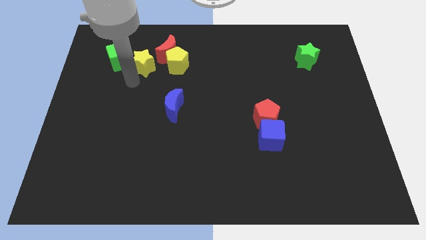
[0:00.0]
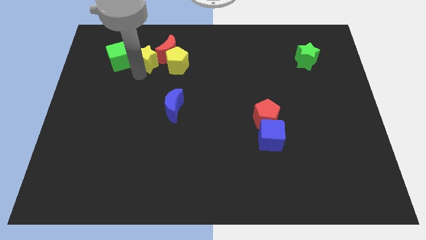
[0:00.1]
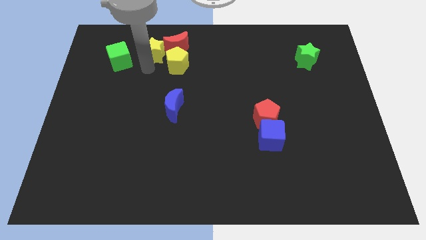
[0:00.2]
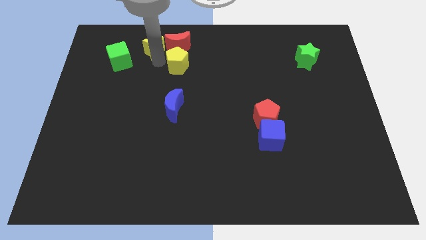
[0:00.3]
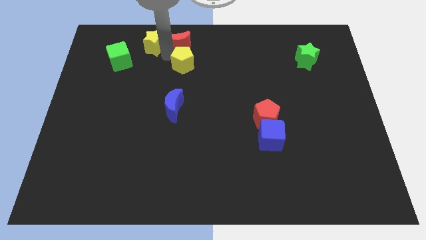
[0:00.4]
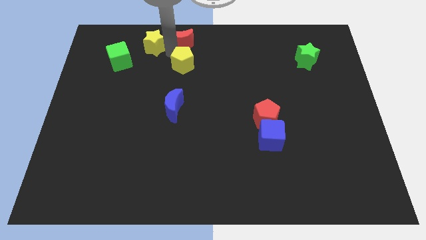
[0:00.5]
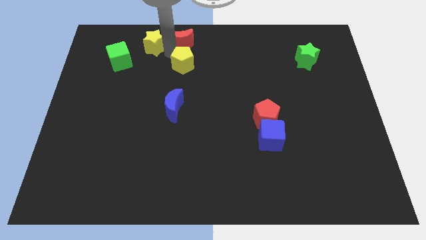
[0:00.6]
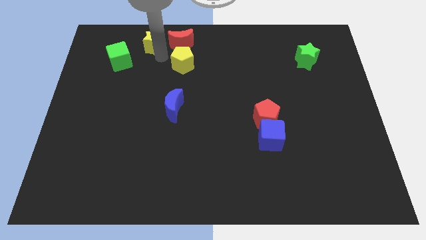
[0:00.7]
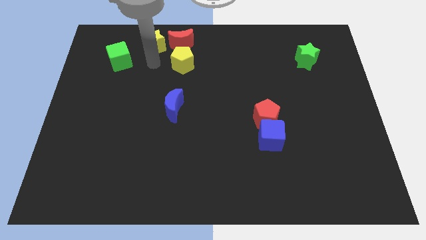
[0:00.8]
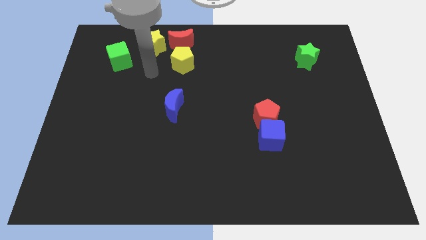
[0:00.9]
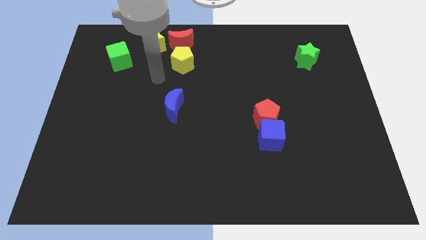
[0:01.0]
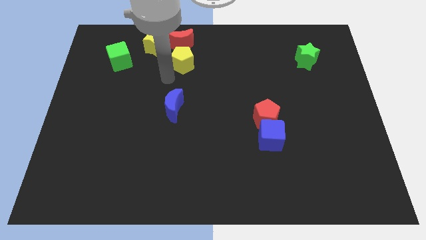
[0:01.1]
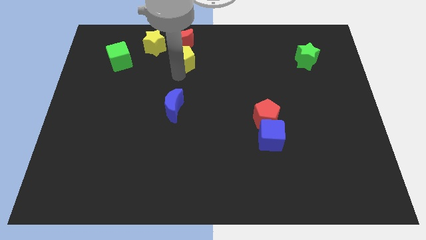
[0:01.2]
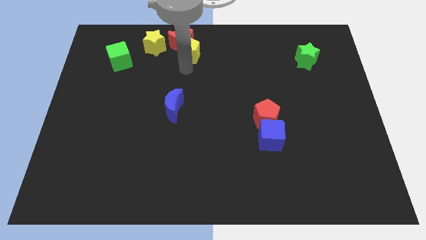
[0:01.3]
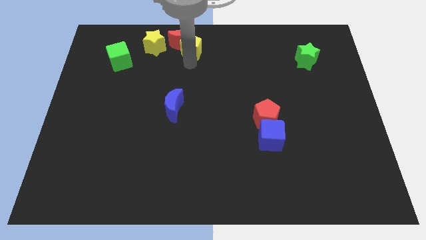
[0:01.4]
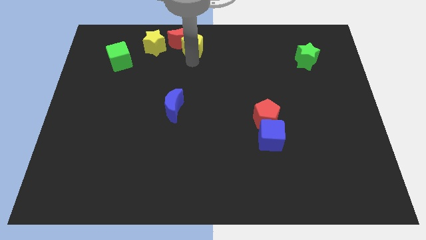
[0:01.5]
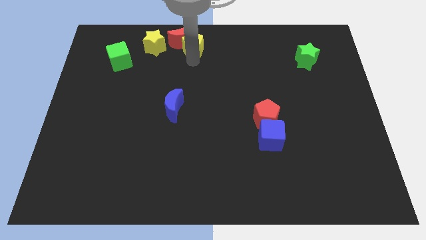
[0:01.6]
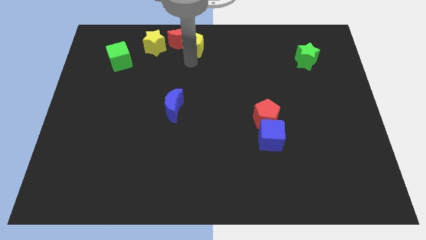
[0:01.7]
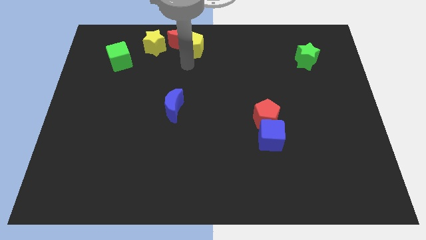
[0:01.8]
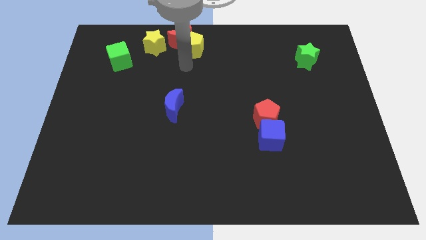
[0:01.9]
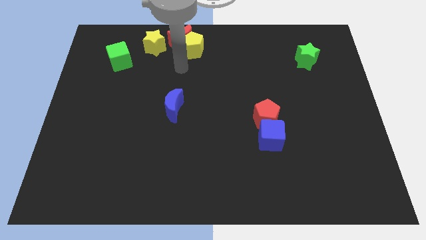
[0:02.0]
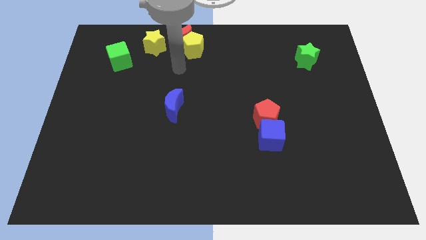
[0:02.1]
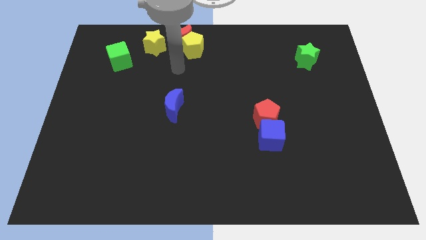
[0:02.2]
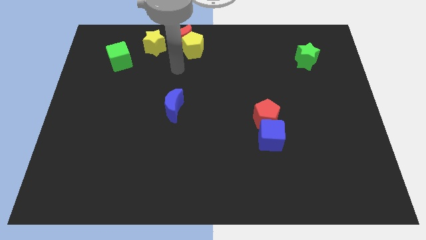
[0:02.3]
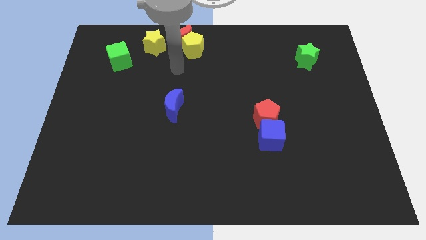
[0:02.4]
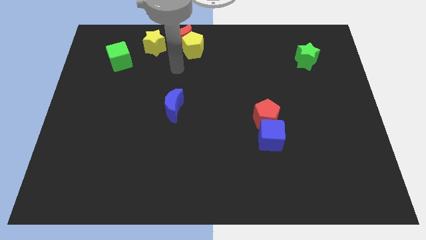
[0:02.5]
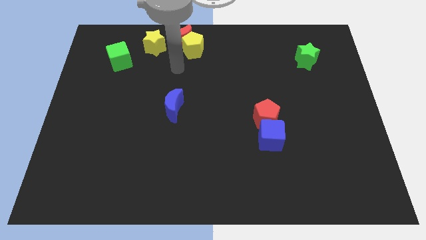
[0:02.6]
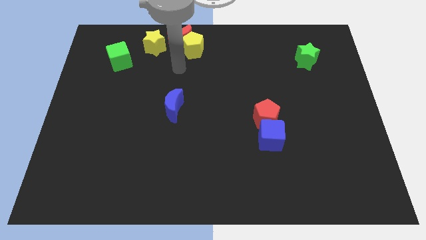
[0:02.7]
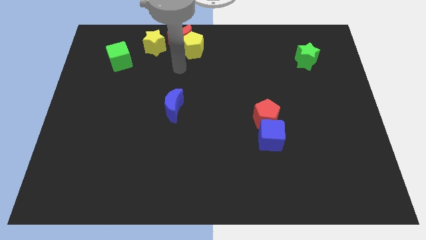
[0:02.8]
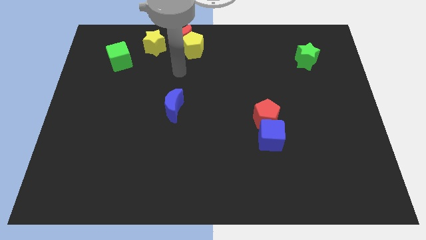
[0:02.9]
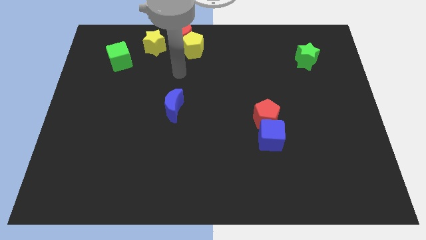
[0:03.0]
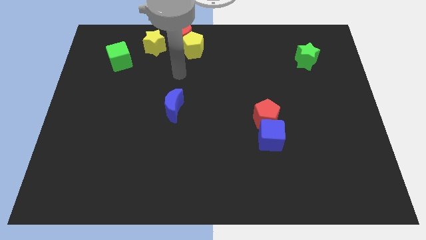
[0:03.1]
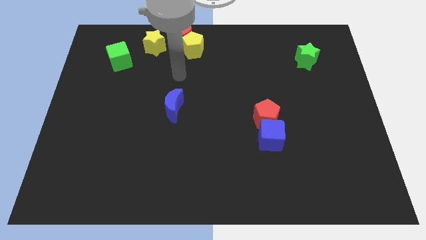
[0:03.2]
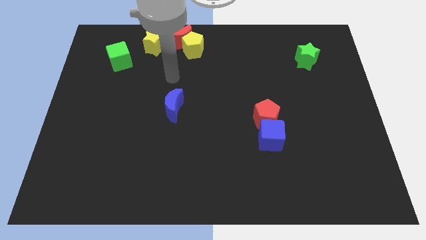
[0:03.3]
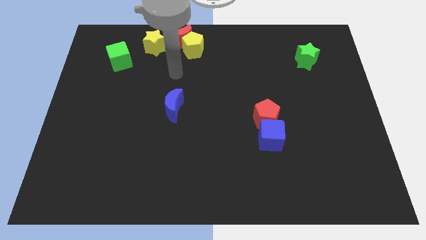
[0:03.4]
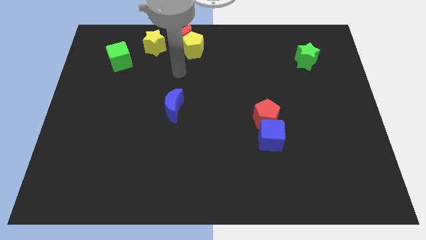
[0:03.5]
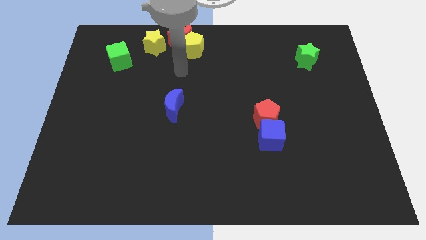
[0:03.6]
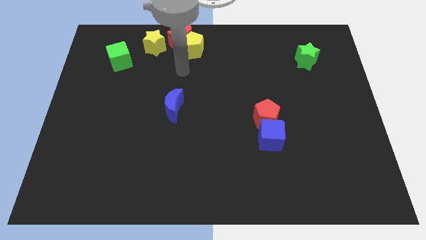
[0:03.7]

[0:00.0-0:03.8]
push yellow blocks and the red moon diagonally top right to the green cube

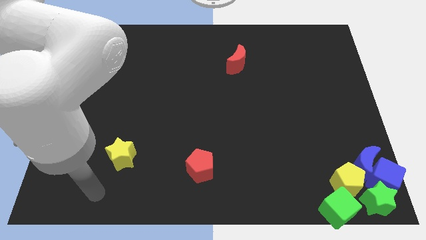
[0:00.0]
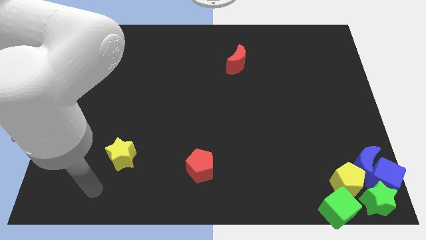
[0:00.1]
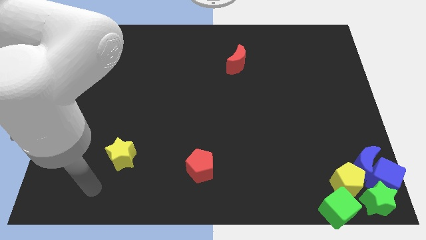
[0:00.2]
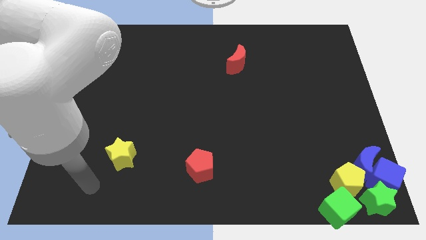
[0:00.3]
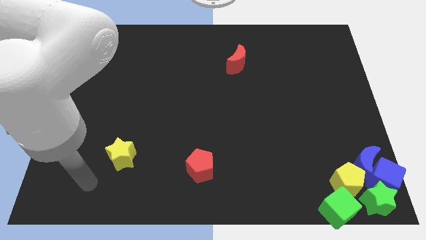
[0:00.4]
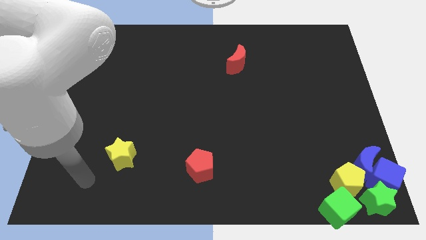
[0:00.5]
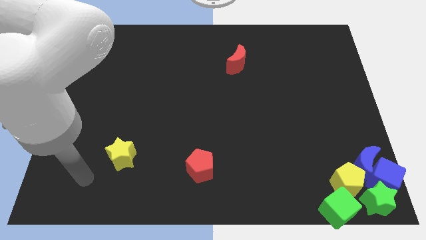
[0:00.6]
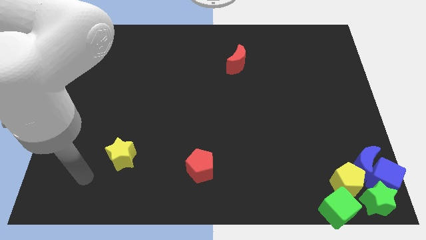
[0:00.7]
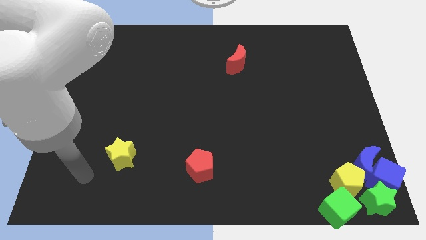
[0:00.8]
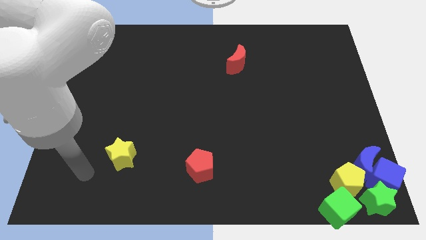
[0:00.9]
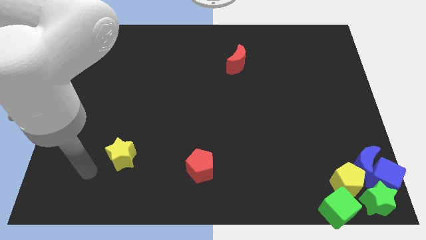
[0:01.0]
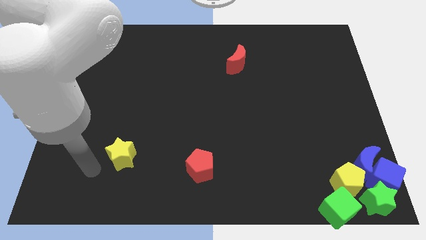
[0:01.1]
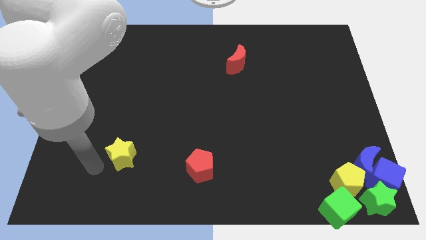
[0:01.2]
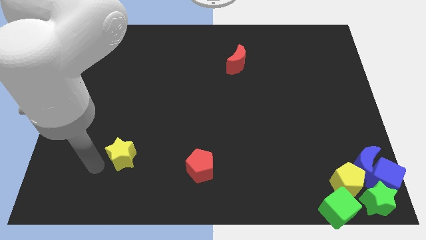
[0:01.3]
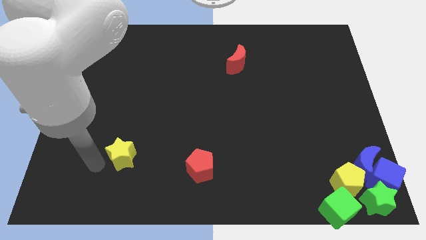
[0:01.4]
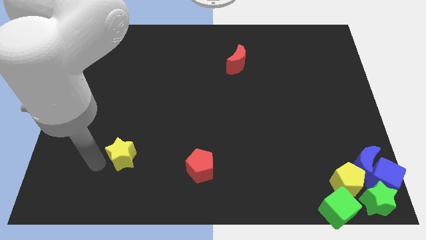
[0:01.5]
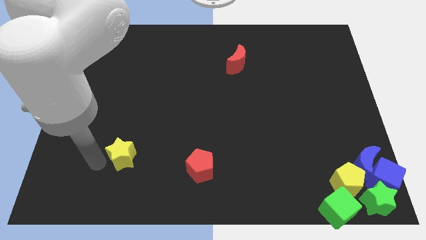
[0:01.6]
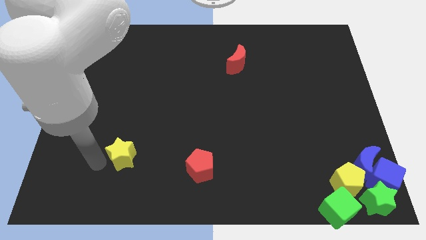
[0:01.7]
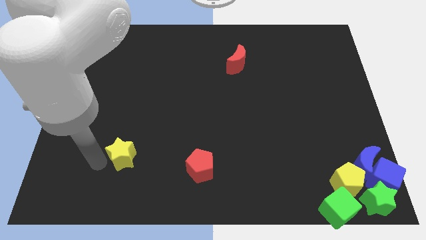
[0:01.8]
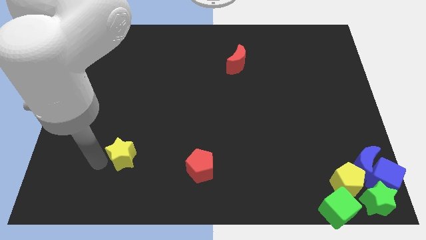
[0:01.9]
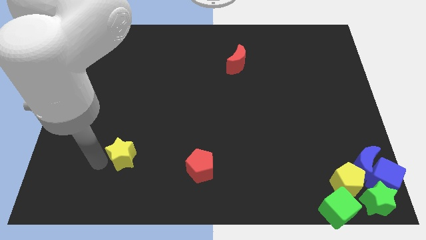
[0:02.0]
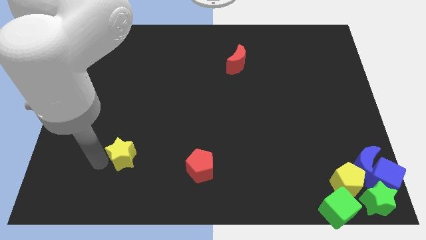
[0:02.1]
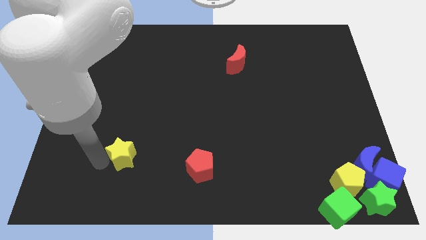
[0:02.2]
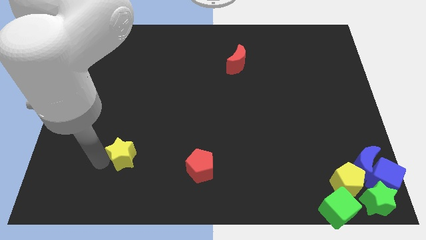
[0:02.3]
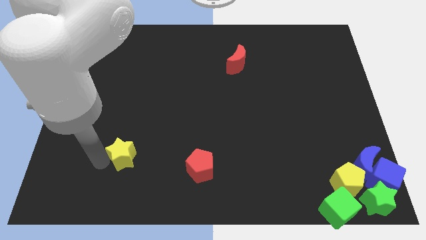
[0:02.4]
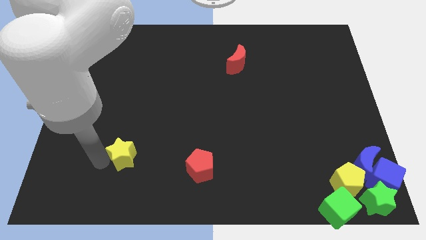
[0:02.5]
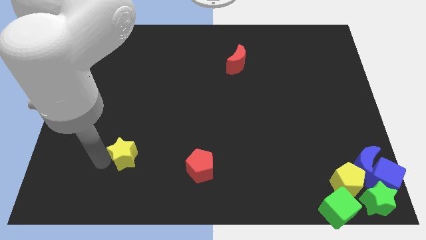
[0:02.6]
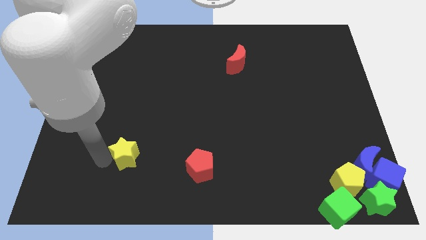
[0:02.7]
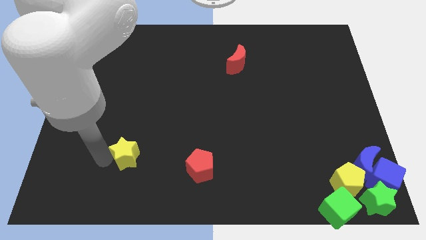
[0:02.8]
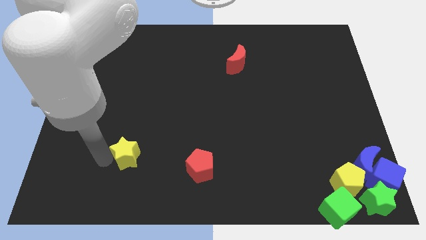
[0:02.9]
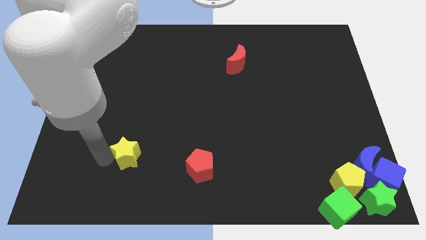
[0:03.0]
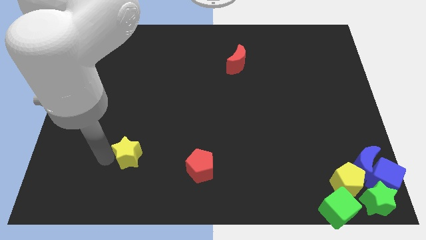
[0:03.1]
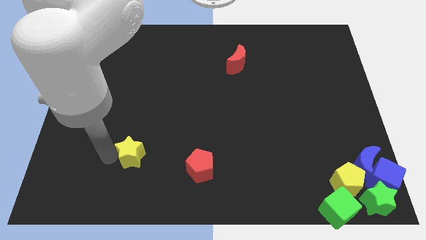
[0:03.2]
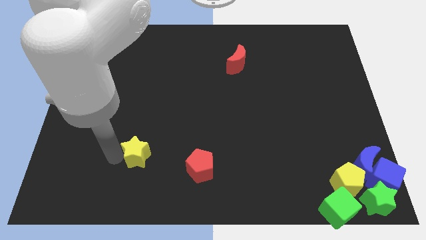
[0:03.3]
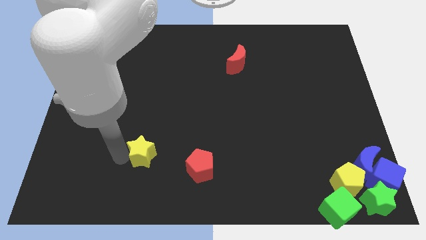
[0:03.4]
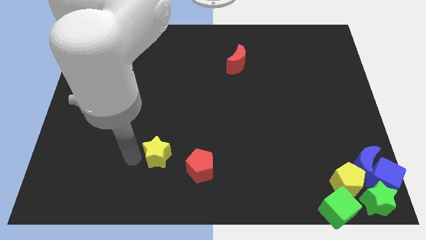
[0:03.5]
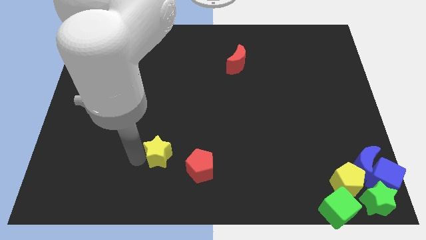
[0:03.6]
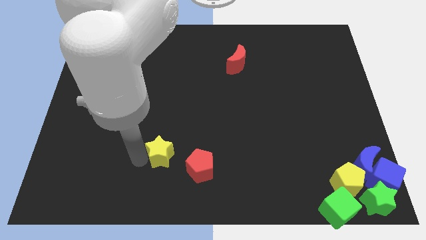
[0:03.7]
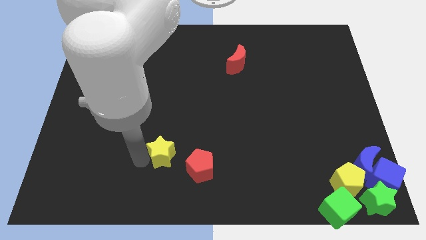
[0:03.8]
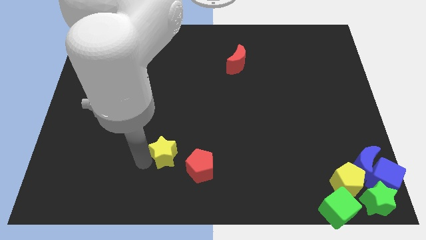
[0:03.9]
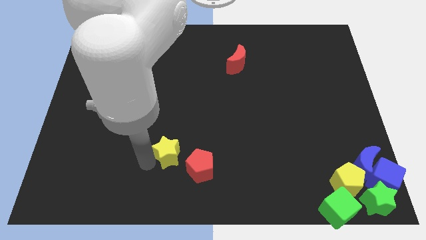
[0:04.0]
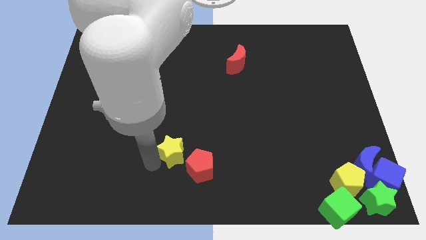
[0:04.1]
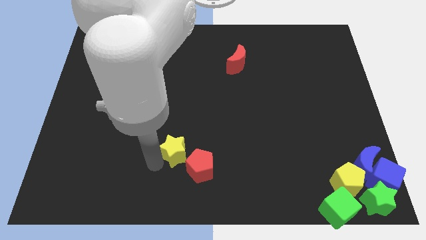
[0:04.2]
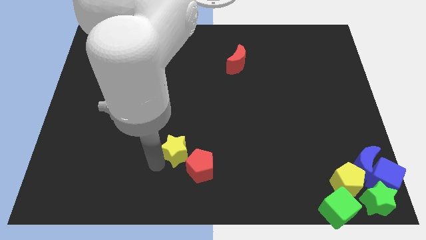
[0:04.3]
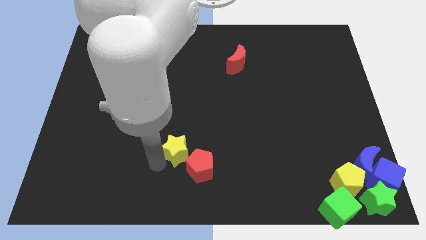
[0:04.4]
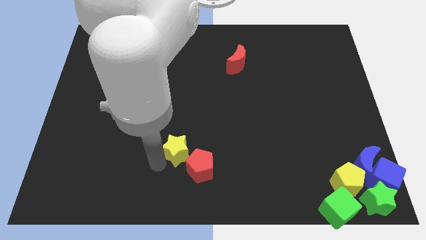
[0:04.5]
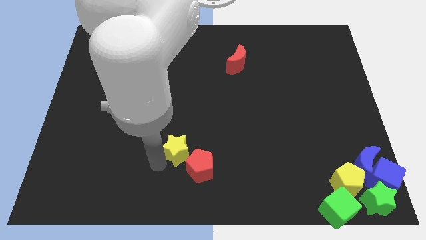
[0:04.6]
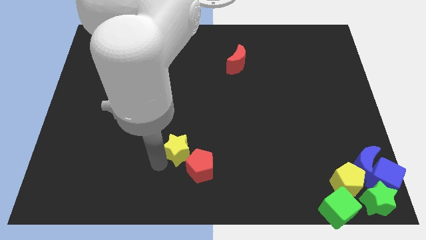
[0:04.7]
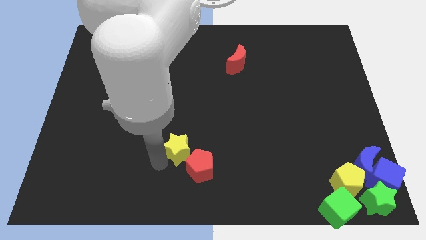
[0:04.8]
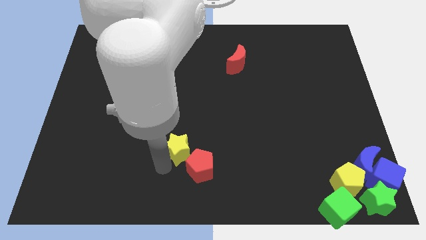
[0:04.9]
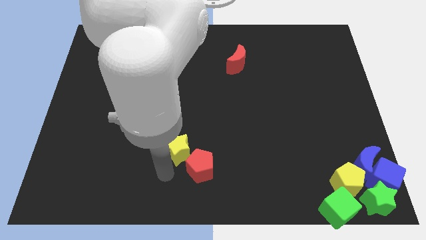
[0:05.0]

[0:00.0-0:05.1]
push yellow star top left to the red pentagon
